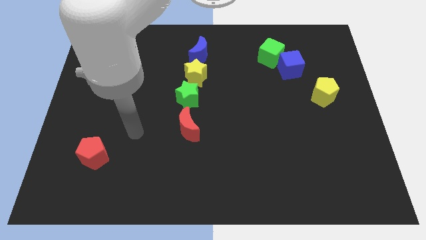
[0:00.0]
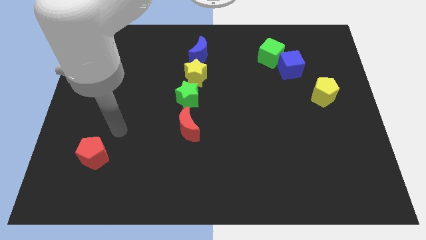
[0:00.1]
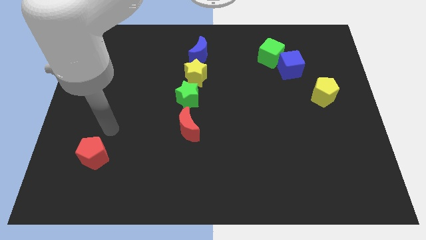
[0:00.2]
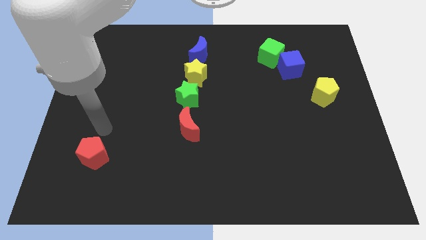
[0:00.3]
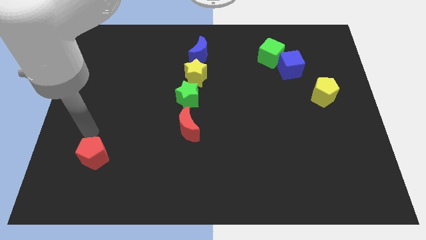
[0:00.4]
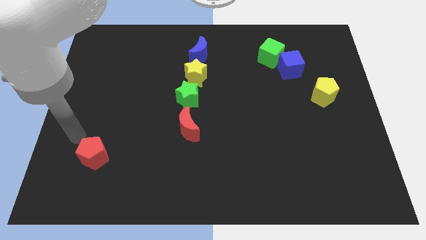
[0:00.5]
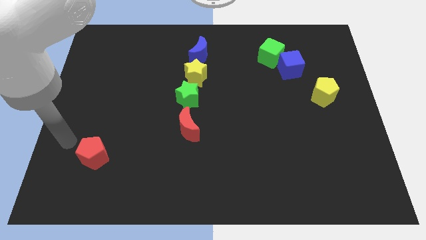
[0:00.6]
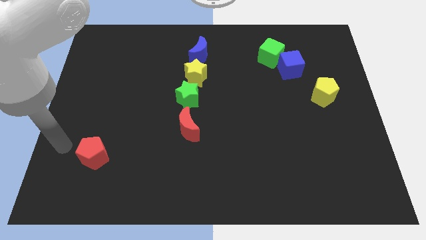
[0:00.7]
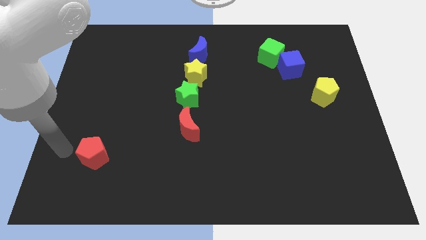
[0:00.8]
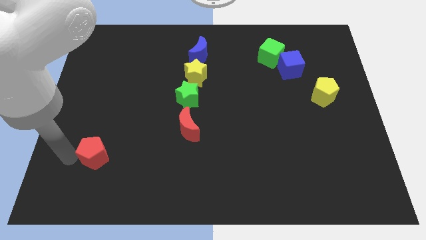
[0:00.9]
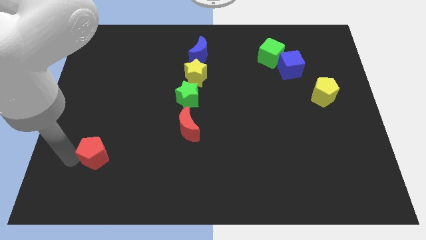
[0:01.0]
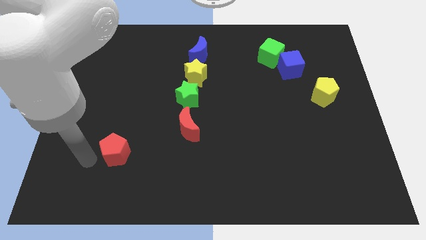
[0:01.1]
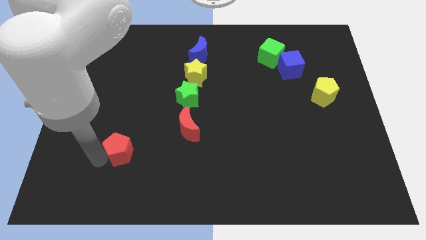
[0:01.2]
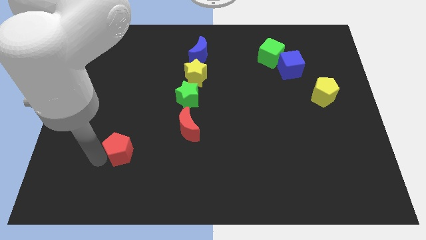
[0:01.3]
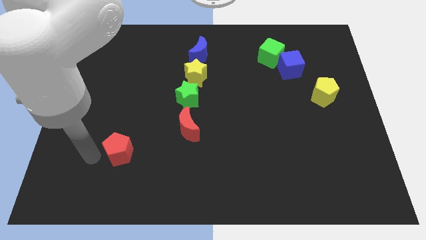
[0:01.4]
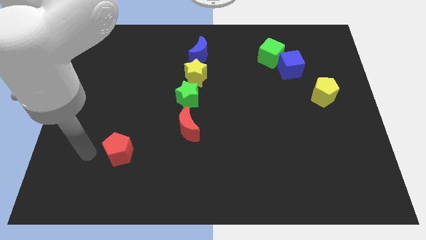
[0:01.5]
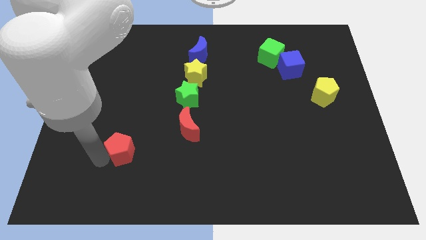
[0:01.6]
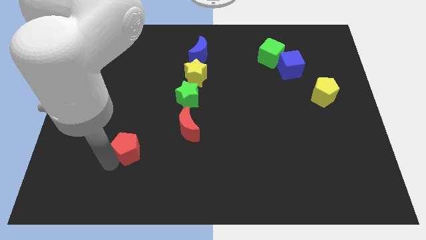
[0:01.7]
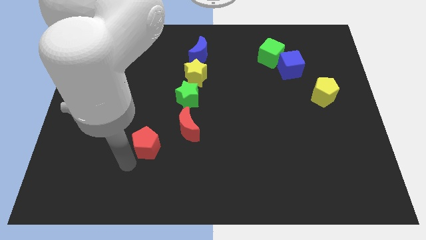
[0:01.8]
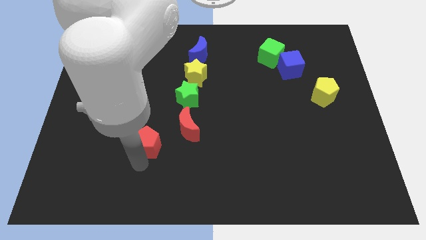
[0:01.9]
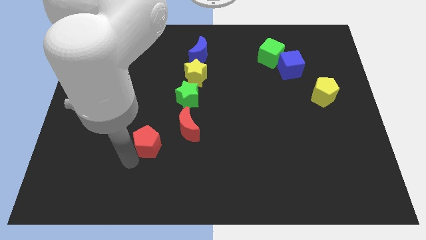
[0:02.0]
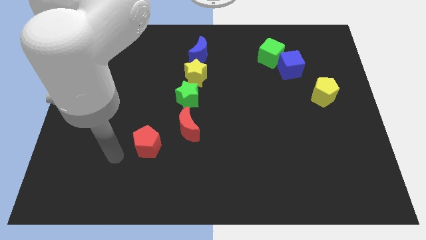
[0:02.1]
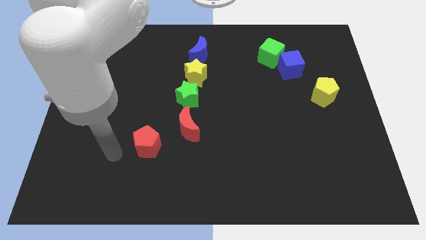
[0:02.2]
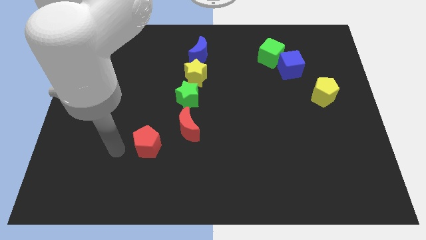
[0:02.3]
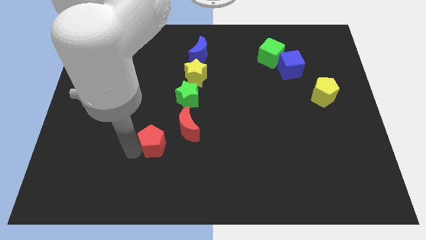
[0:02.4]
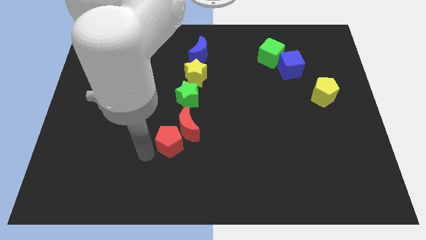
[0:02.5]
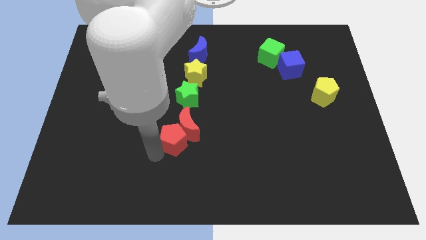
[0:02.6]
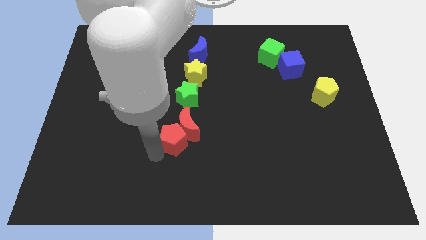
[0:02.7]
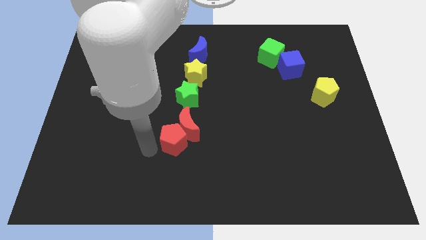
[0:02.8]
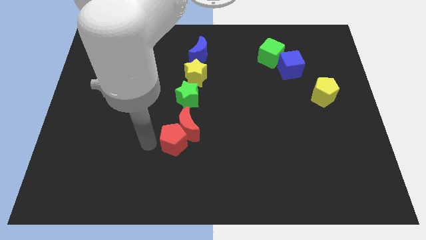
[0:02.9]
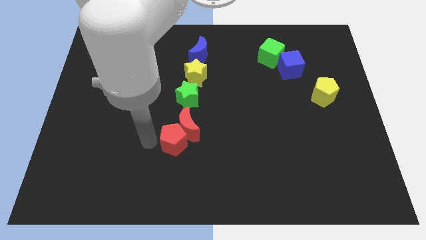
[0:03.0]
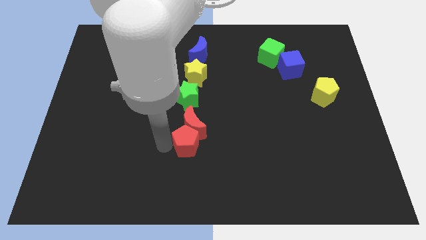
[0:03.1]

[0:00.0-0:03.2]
push the red pentagon into the red moon

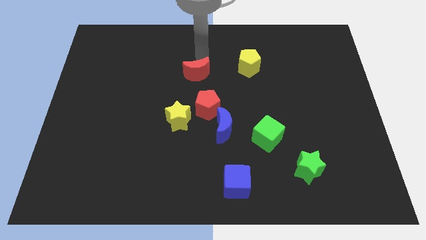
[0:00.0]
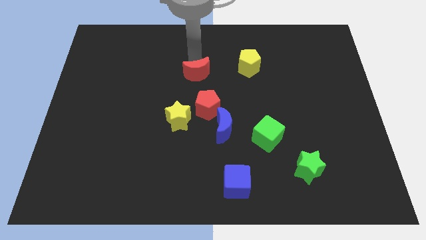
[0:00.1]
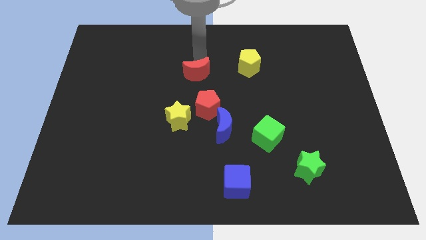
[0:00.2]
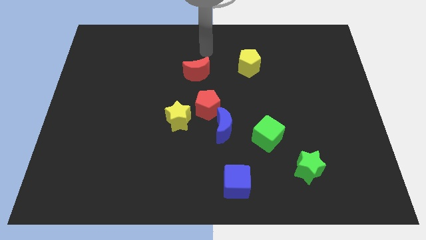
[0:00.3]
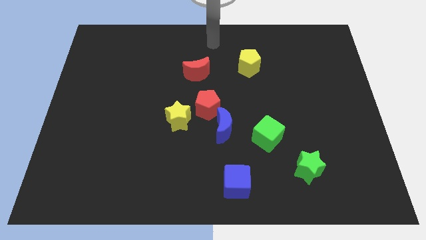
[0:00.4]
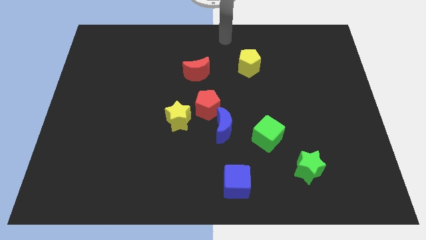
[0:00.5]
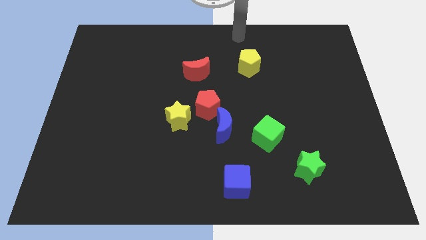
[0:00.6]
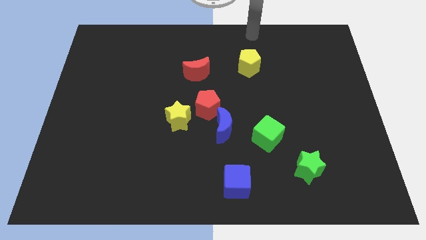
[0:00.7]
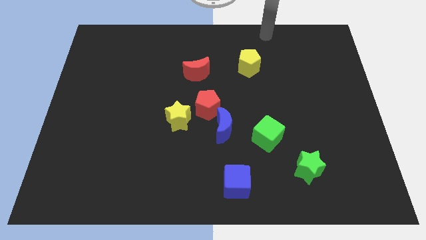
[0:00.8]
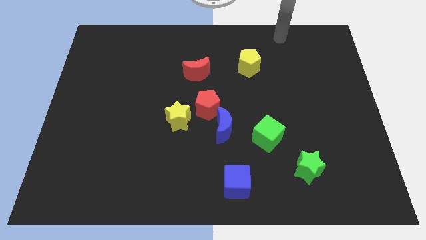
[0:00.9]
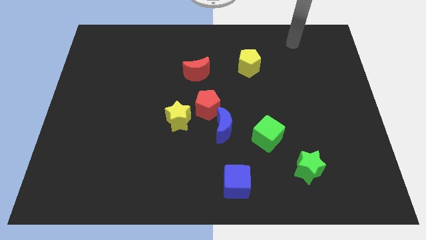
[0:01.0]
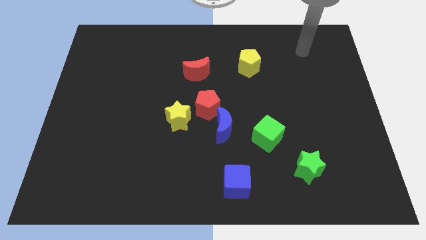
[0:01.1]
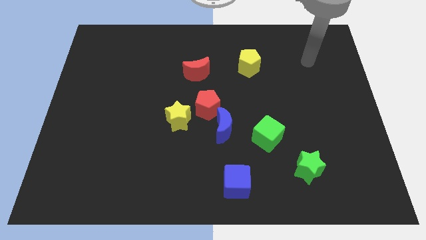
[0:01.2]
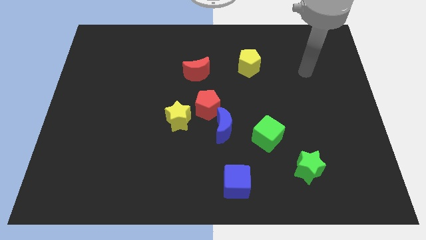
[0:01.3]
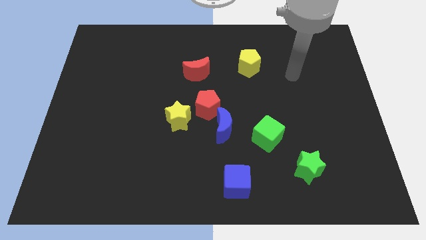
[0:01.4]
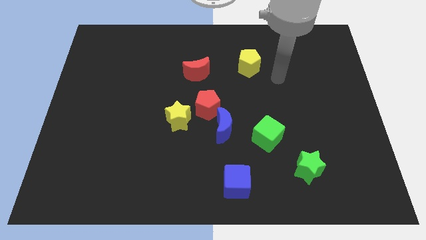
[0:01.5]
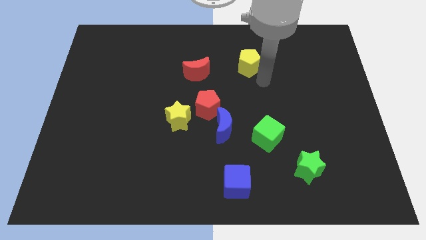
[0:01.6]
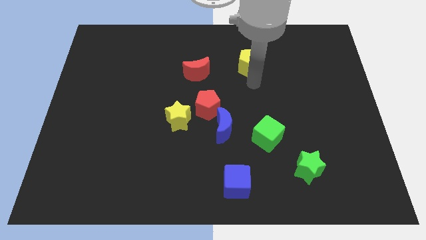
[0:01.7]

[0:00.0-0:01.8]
go and move your hand at the bottom of the yellow pentagon

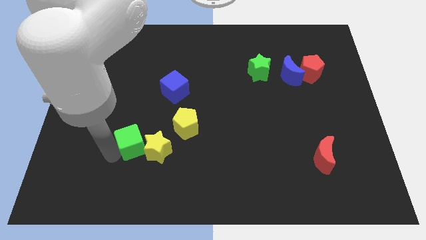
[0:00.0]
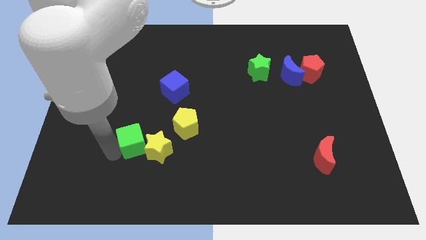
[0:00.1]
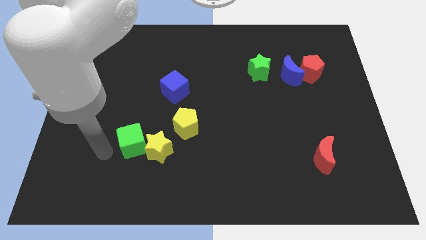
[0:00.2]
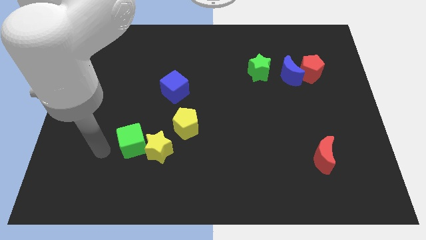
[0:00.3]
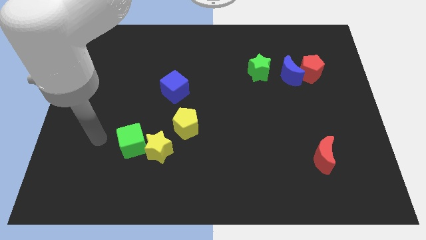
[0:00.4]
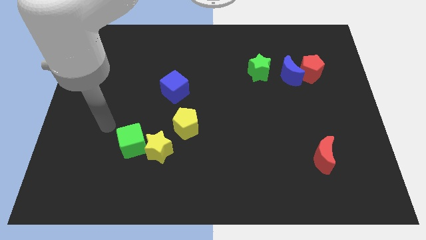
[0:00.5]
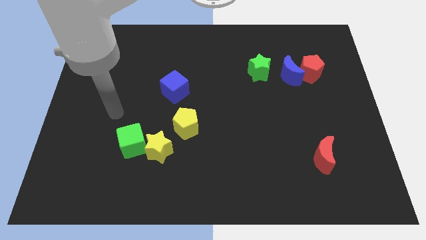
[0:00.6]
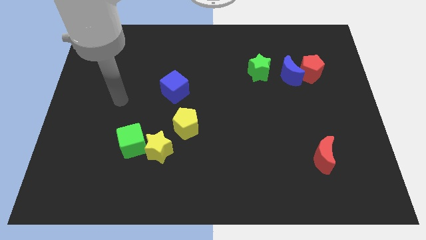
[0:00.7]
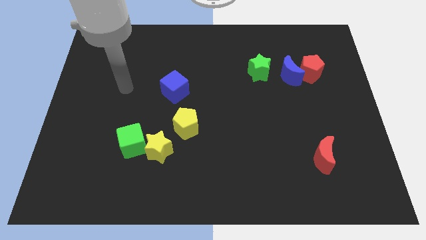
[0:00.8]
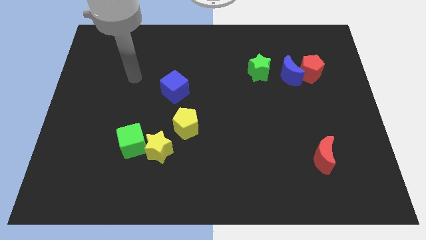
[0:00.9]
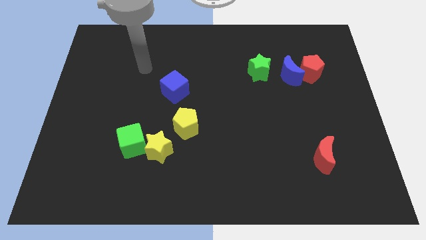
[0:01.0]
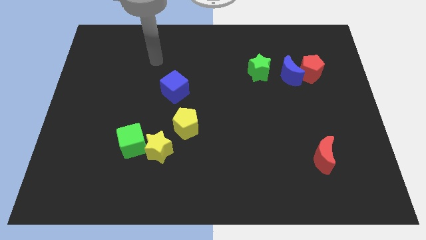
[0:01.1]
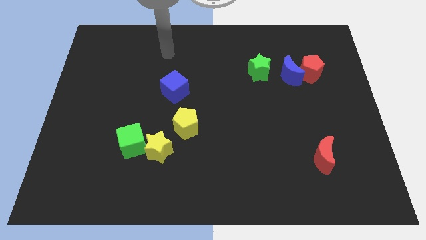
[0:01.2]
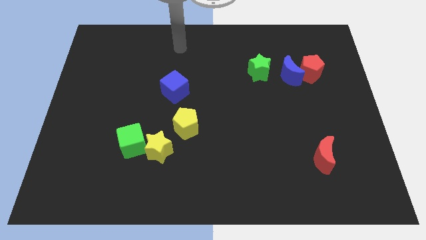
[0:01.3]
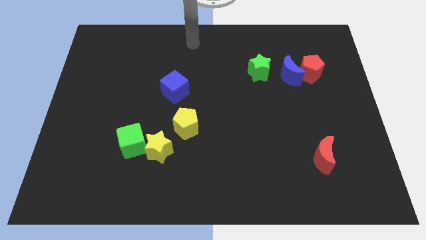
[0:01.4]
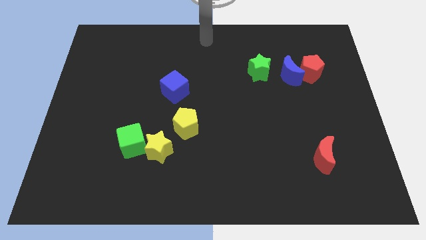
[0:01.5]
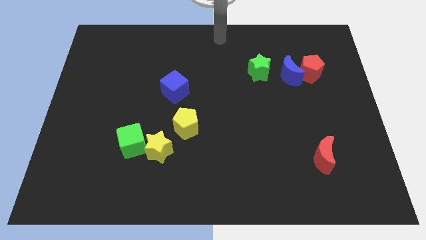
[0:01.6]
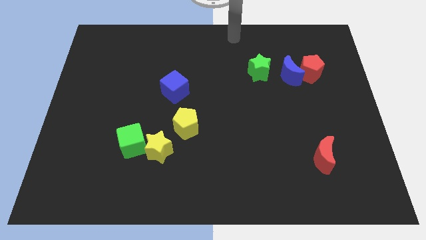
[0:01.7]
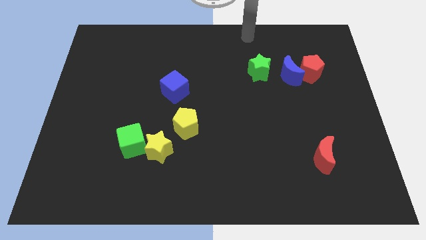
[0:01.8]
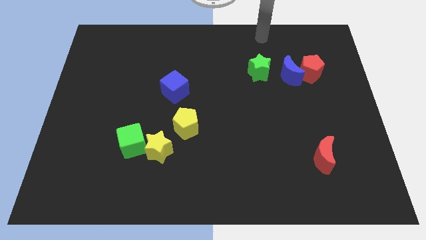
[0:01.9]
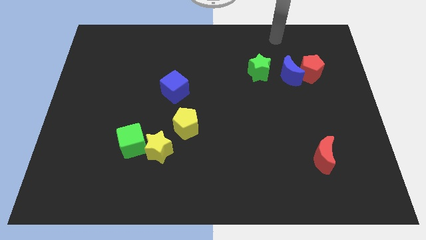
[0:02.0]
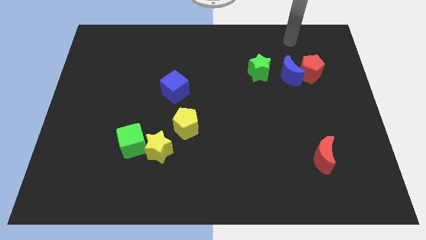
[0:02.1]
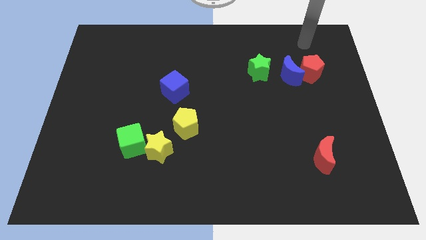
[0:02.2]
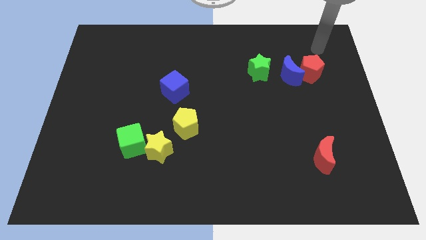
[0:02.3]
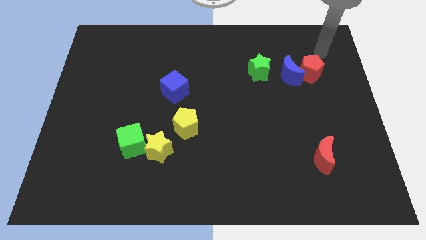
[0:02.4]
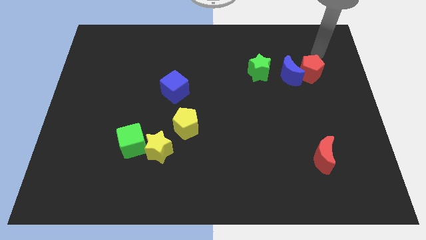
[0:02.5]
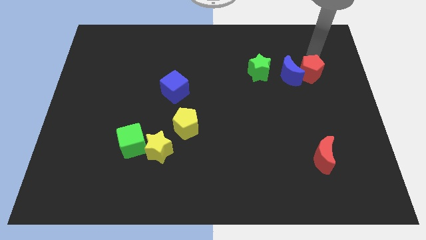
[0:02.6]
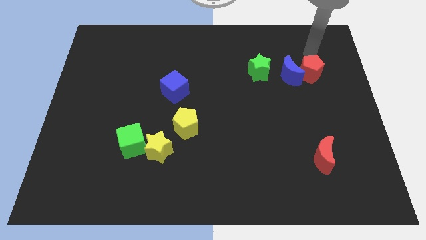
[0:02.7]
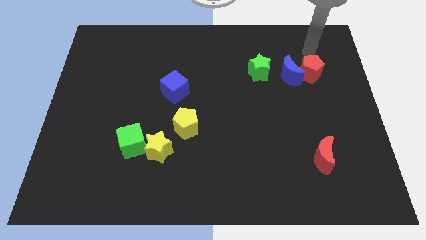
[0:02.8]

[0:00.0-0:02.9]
go away from the green cube

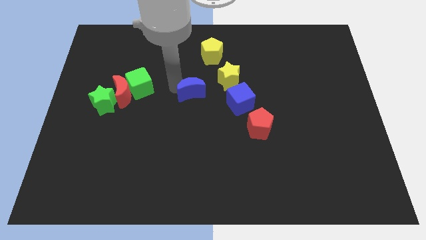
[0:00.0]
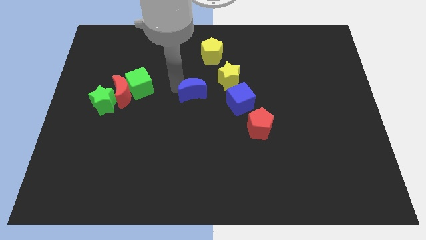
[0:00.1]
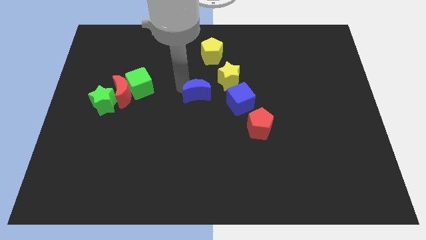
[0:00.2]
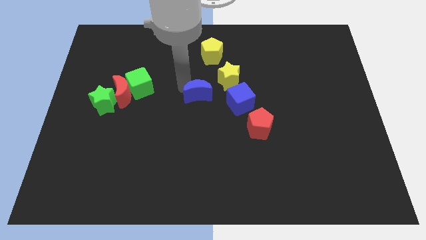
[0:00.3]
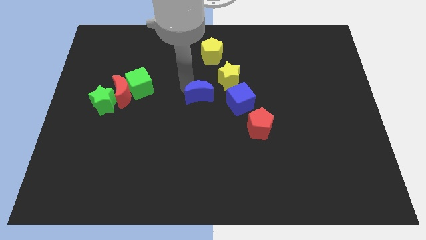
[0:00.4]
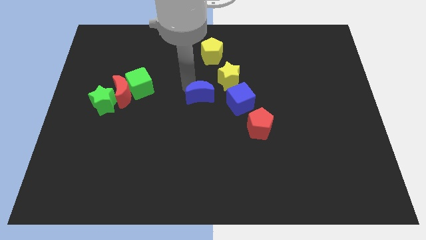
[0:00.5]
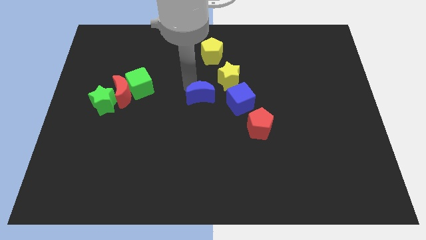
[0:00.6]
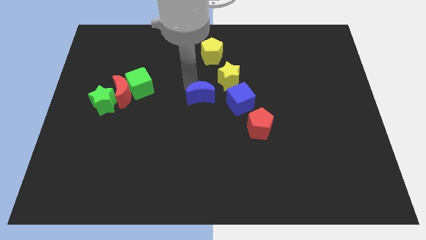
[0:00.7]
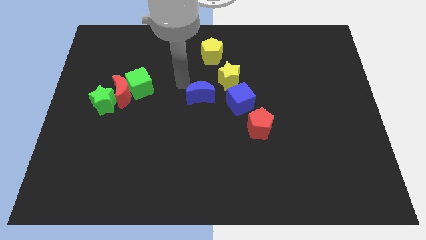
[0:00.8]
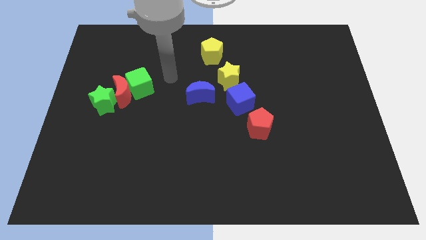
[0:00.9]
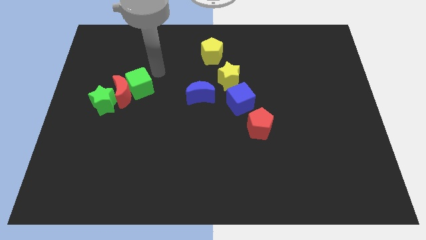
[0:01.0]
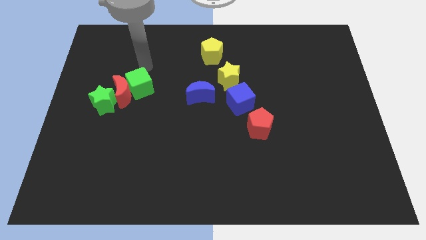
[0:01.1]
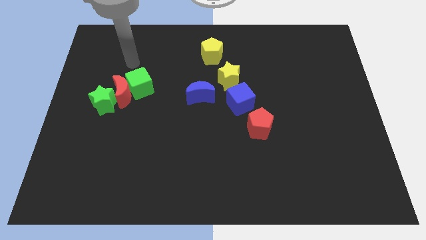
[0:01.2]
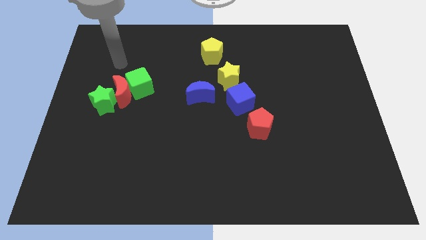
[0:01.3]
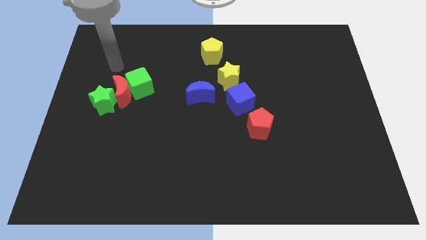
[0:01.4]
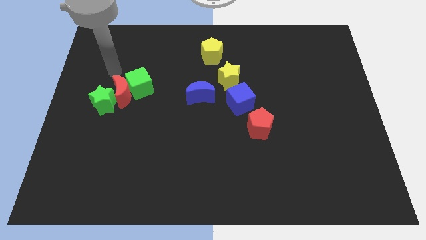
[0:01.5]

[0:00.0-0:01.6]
move the blue crescent to the bottom left of the yellow star
